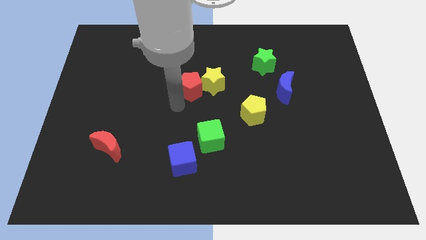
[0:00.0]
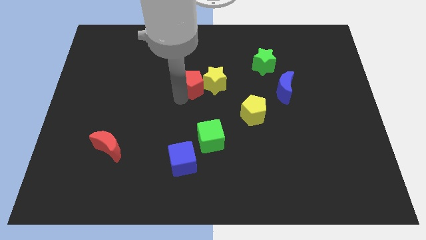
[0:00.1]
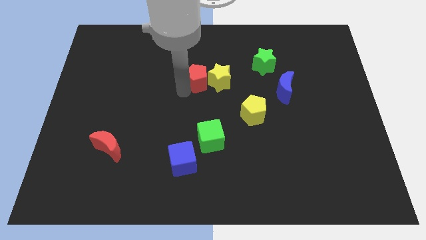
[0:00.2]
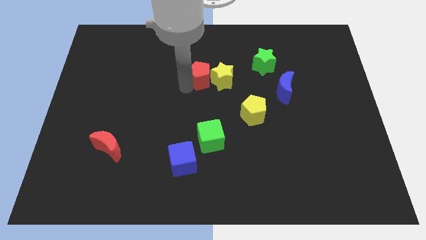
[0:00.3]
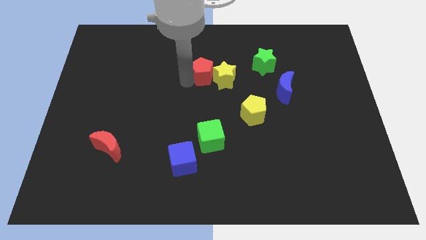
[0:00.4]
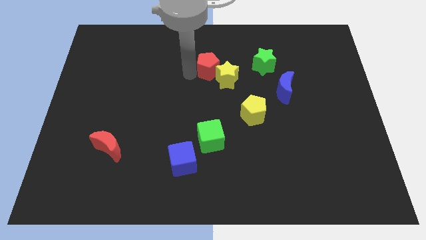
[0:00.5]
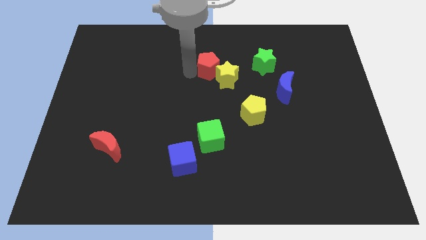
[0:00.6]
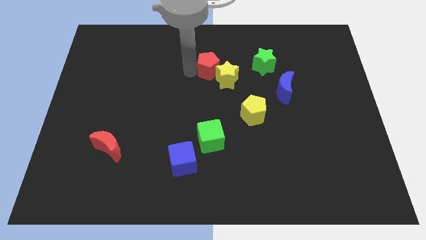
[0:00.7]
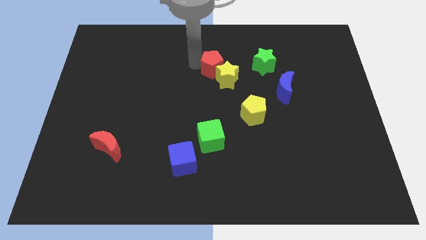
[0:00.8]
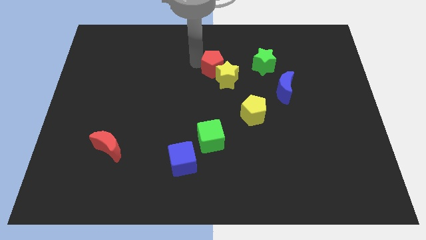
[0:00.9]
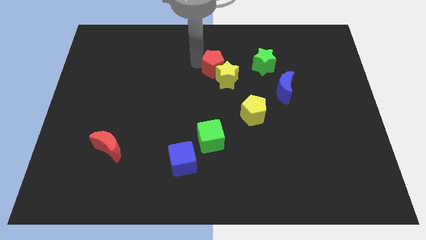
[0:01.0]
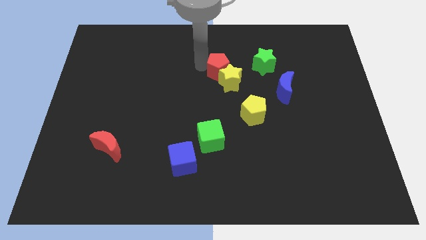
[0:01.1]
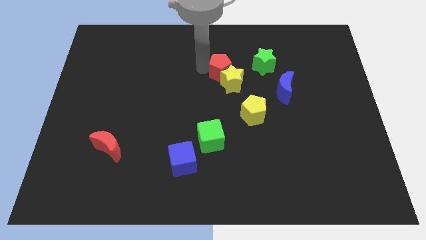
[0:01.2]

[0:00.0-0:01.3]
move the red pentagon and yellow star diagonally to the top right of the red moon

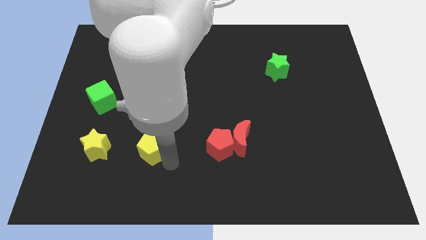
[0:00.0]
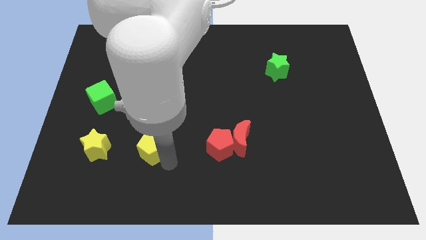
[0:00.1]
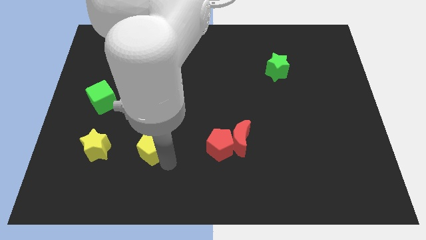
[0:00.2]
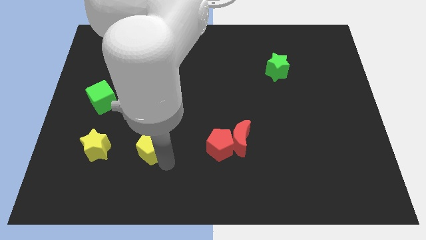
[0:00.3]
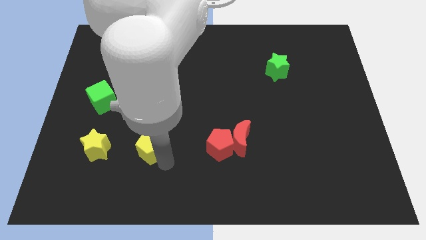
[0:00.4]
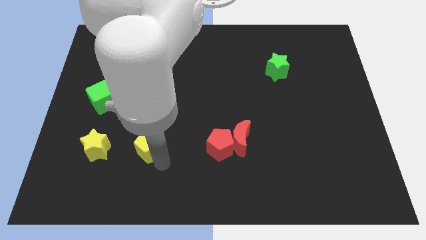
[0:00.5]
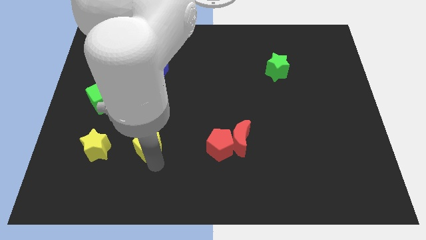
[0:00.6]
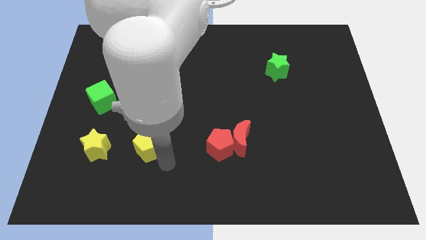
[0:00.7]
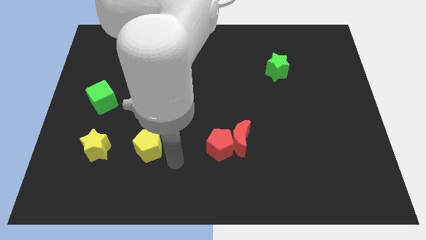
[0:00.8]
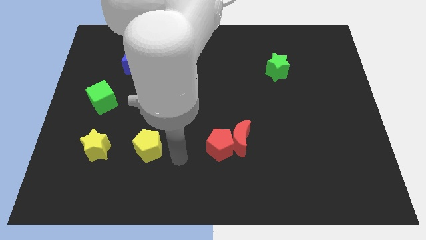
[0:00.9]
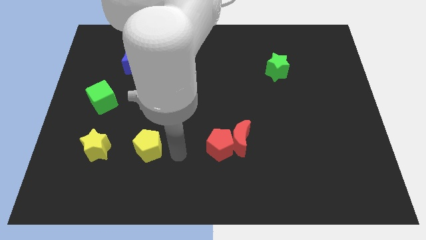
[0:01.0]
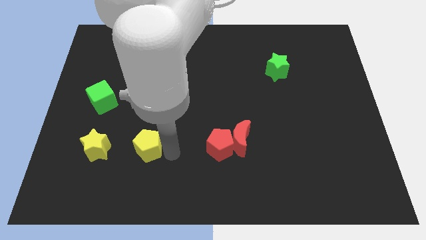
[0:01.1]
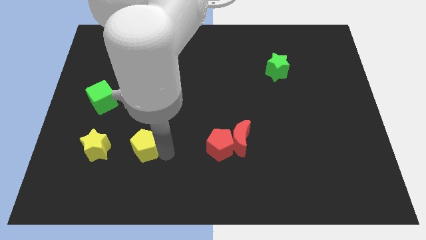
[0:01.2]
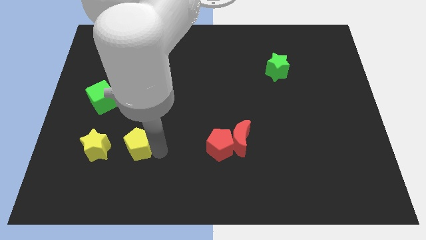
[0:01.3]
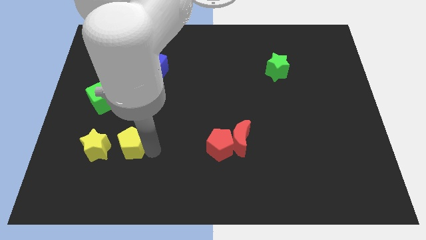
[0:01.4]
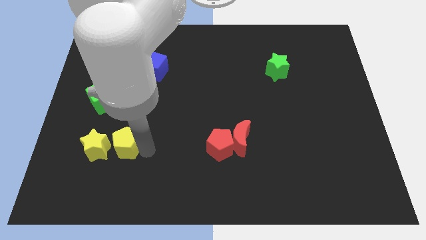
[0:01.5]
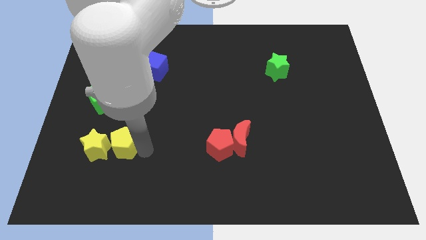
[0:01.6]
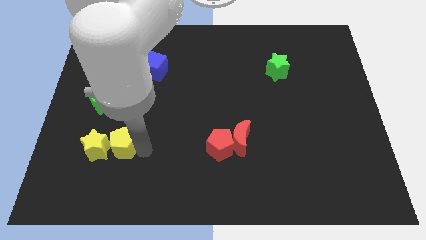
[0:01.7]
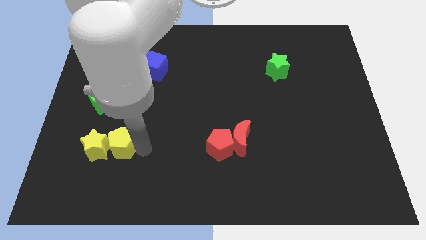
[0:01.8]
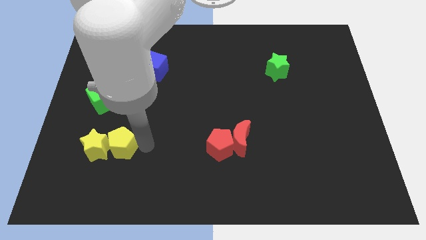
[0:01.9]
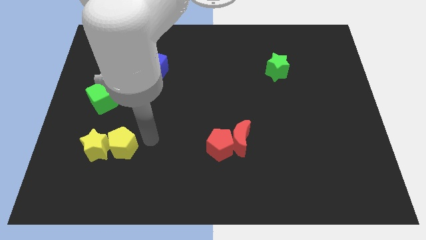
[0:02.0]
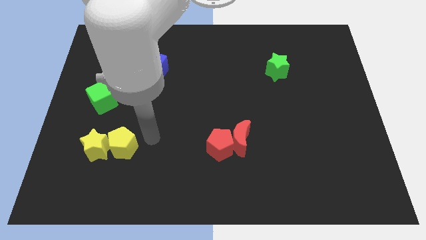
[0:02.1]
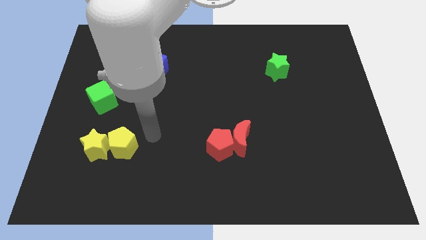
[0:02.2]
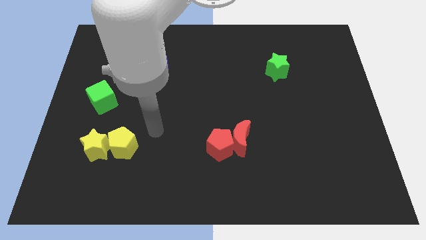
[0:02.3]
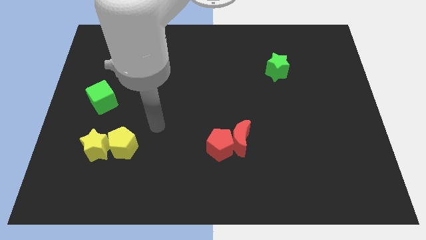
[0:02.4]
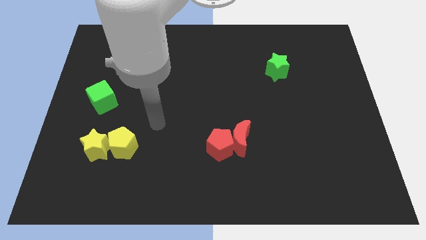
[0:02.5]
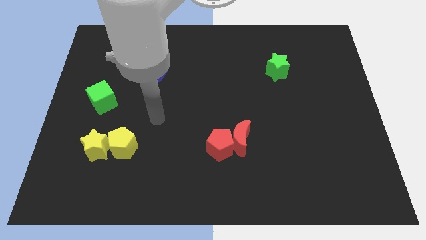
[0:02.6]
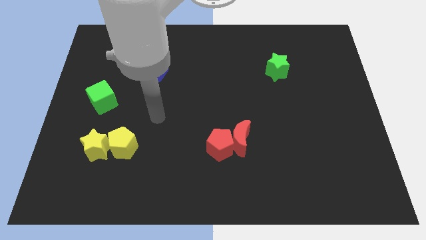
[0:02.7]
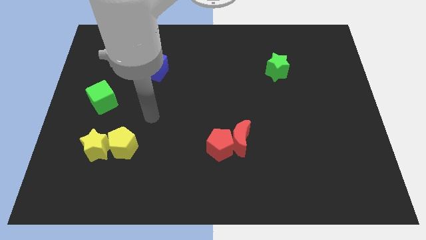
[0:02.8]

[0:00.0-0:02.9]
put the yellow pentagon at the right side of the yellow star

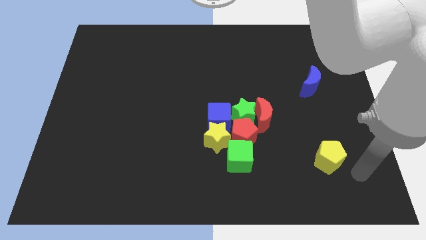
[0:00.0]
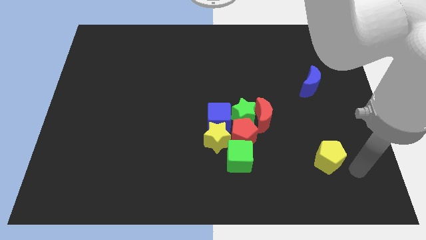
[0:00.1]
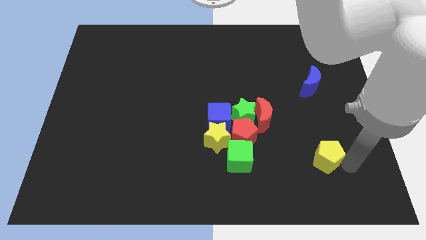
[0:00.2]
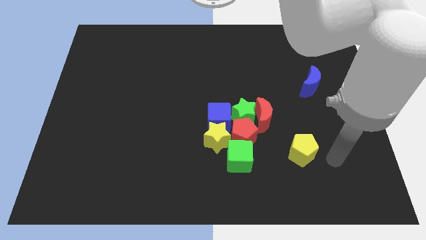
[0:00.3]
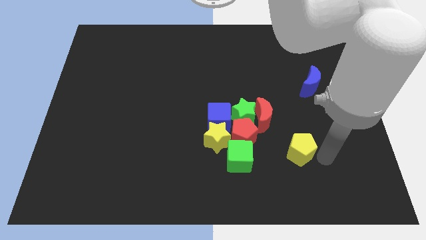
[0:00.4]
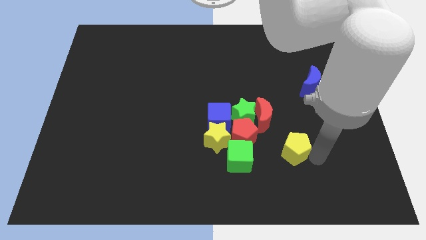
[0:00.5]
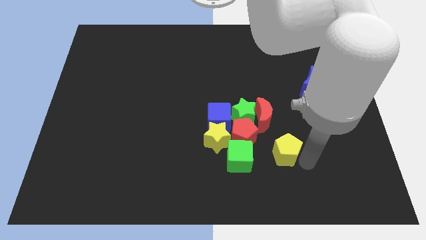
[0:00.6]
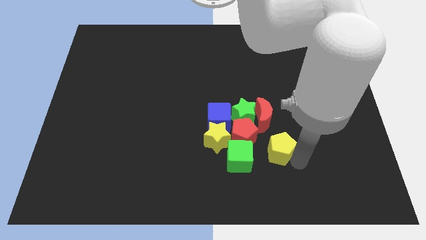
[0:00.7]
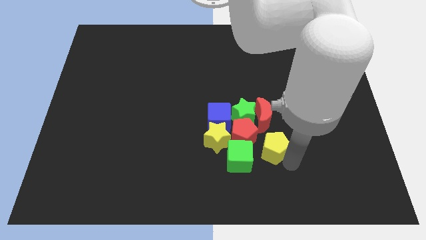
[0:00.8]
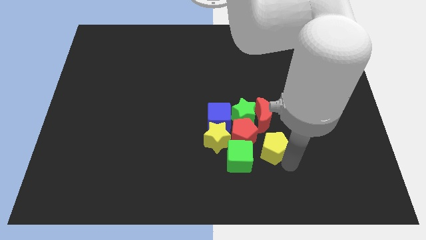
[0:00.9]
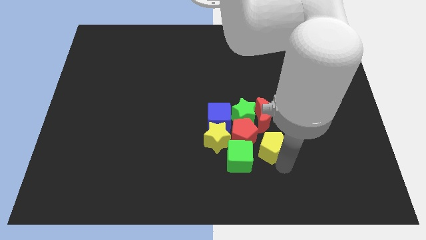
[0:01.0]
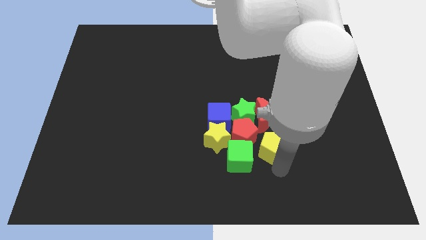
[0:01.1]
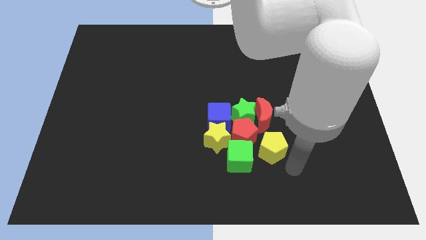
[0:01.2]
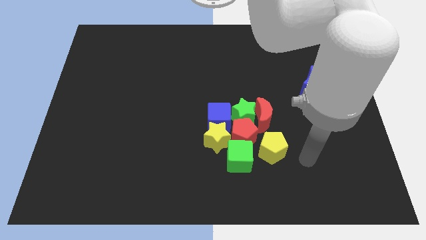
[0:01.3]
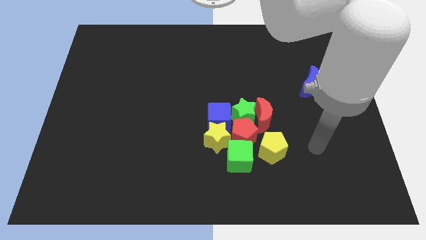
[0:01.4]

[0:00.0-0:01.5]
move the yellow pentagon to the right of green cube

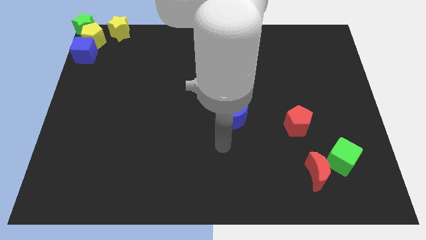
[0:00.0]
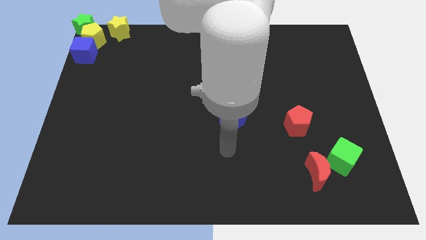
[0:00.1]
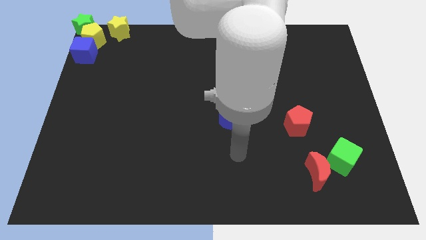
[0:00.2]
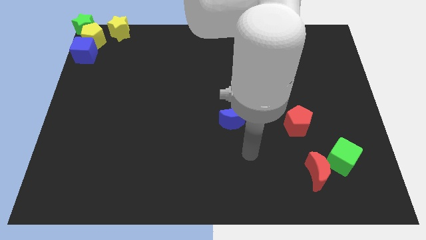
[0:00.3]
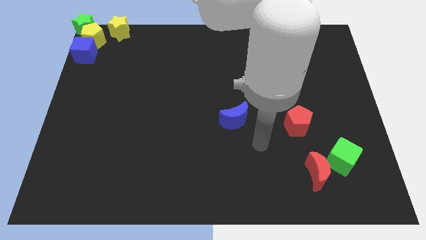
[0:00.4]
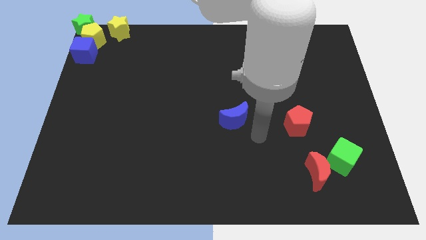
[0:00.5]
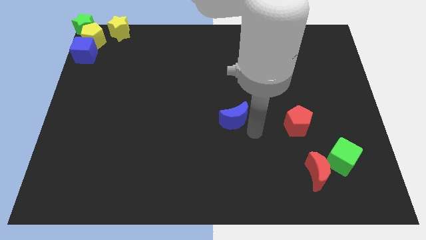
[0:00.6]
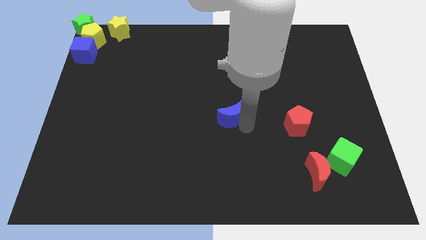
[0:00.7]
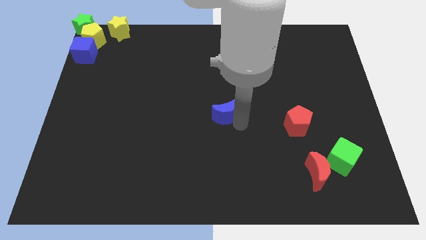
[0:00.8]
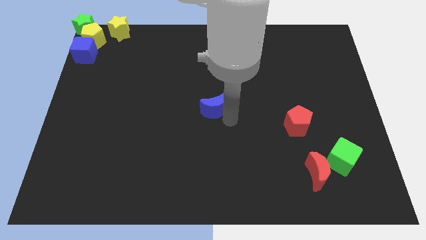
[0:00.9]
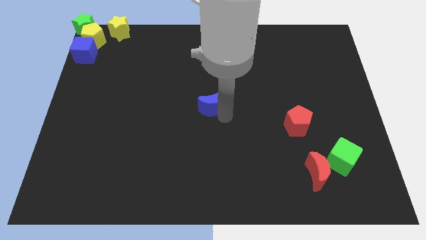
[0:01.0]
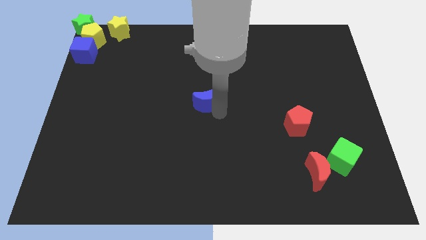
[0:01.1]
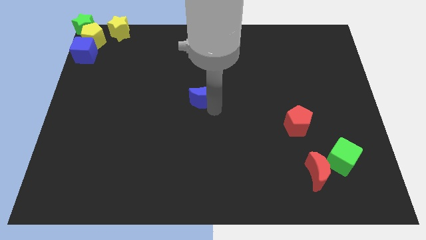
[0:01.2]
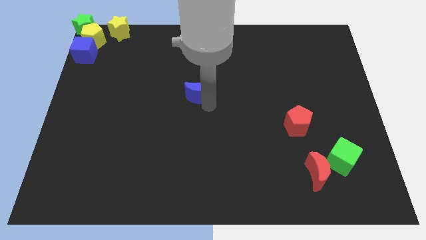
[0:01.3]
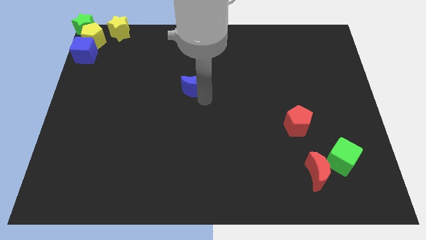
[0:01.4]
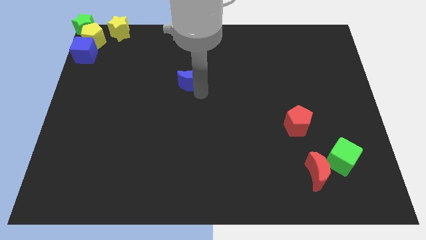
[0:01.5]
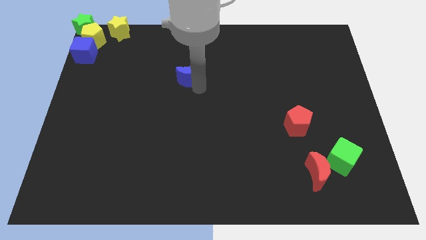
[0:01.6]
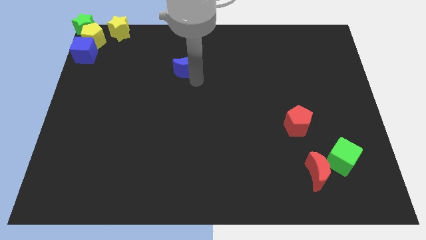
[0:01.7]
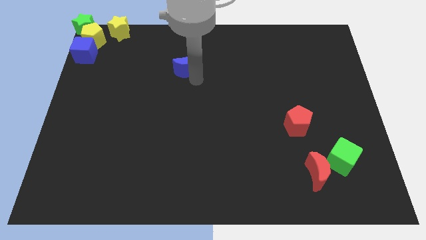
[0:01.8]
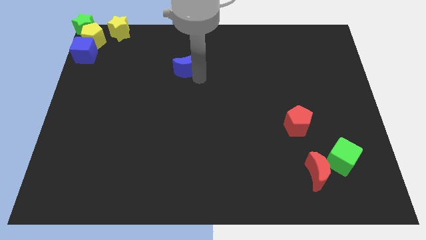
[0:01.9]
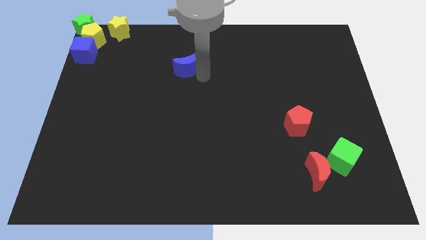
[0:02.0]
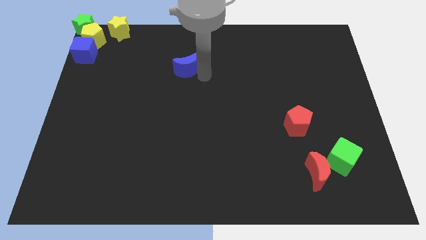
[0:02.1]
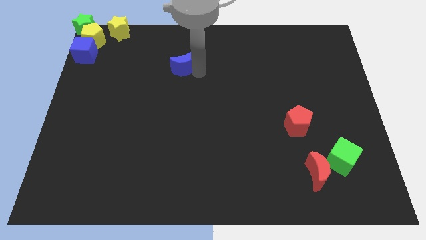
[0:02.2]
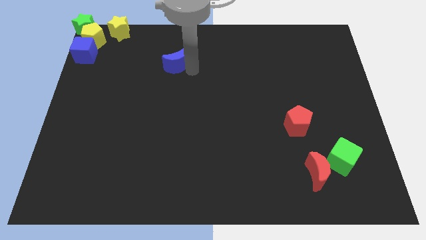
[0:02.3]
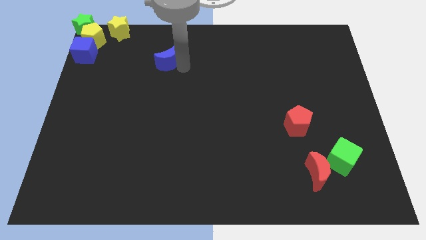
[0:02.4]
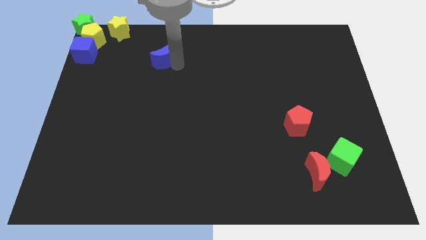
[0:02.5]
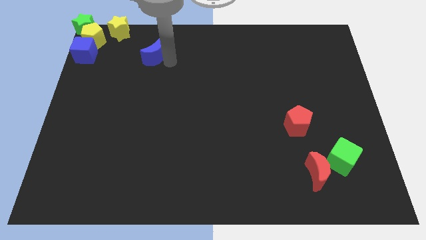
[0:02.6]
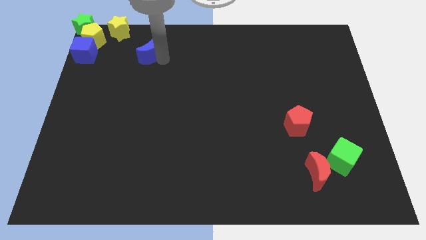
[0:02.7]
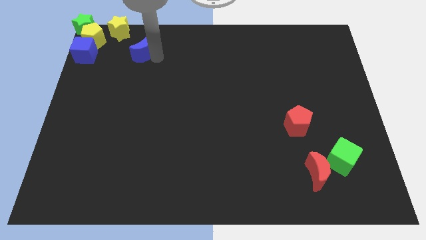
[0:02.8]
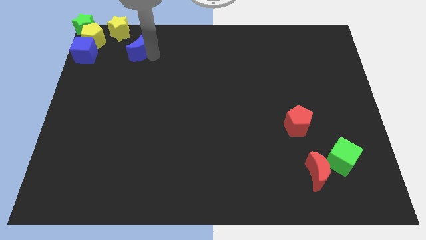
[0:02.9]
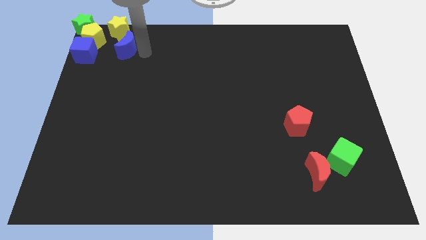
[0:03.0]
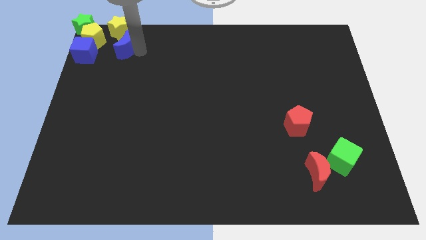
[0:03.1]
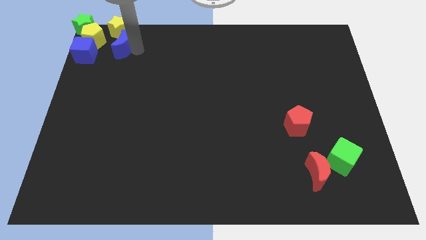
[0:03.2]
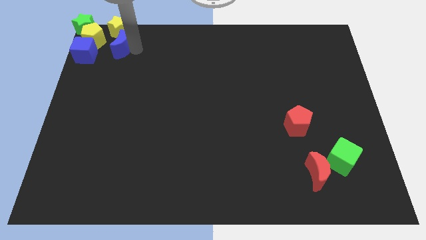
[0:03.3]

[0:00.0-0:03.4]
place blue moon to the bottom of yellow star
